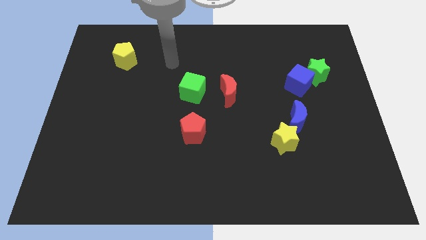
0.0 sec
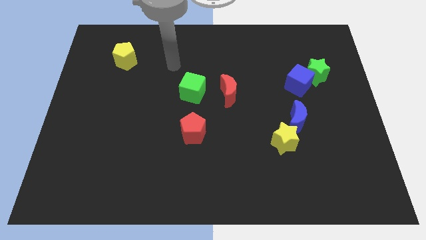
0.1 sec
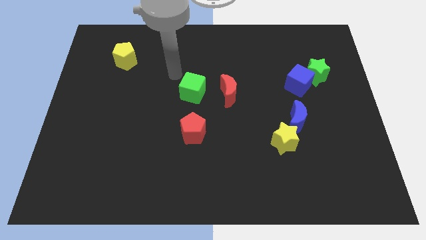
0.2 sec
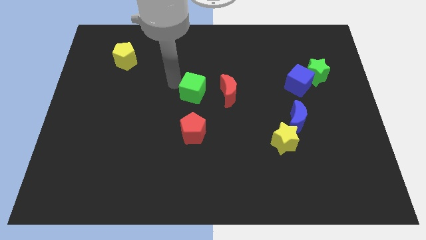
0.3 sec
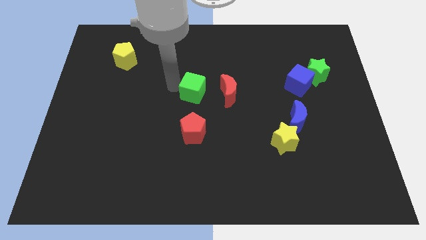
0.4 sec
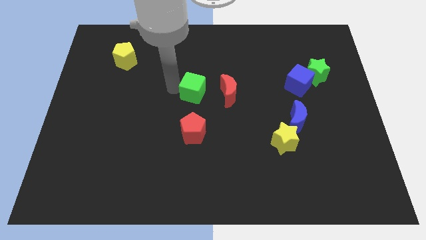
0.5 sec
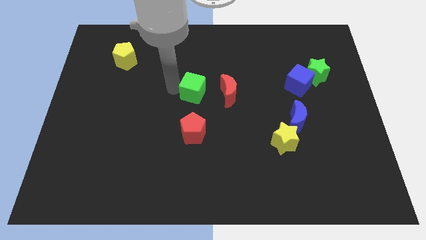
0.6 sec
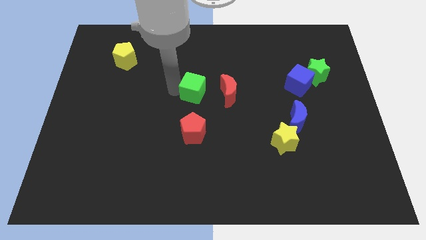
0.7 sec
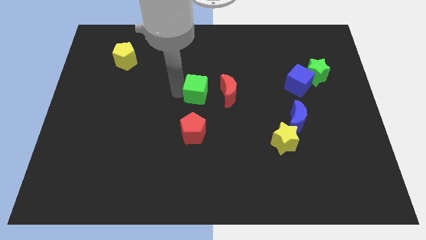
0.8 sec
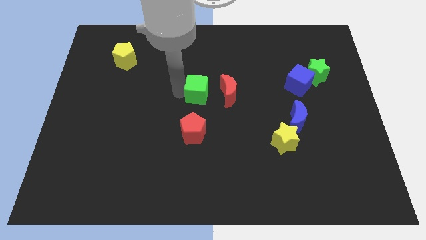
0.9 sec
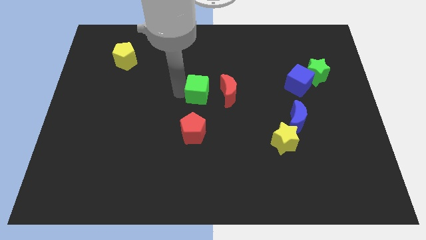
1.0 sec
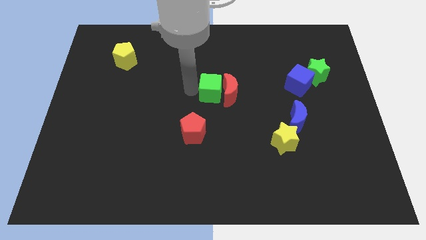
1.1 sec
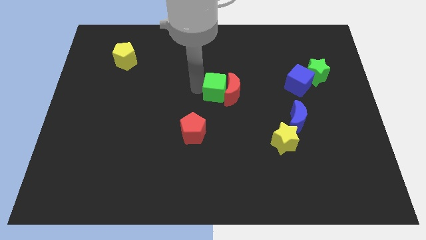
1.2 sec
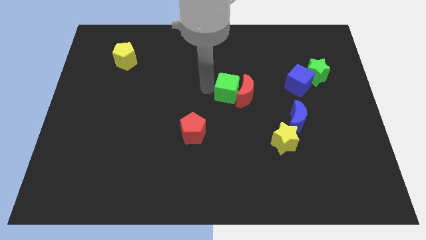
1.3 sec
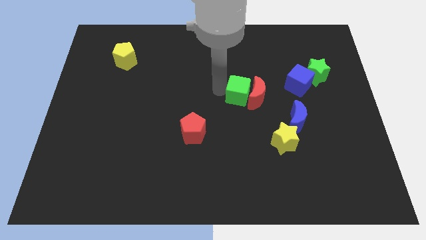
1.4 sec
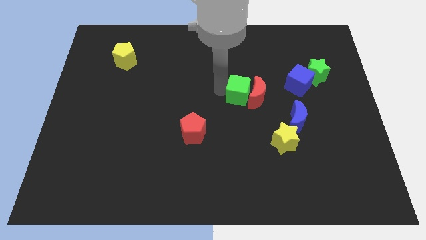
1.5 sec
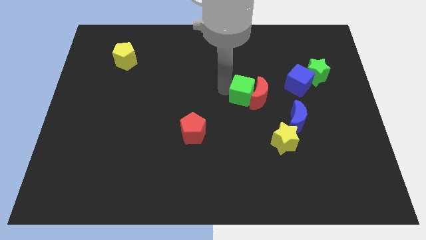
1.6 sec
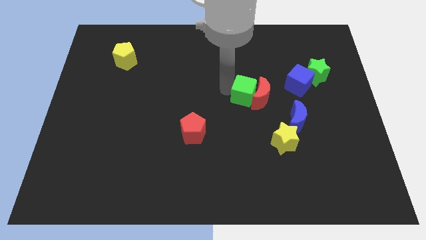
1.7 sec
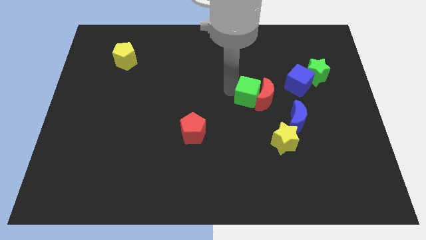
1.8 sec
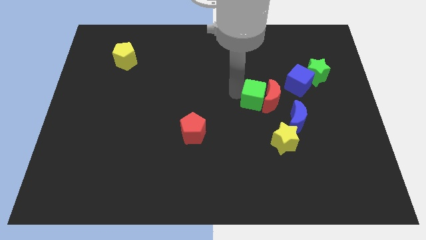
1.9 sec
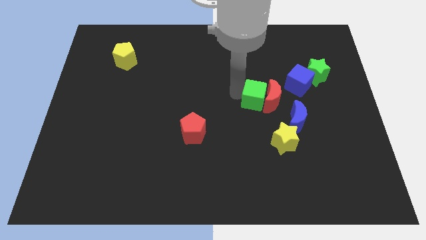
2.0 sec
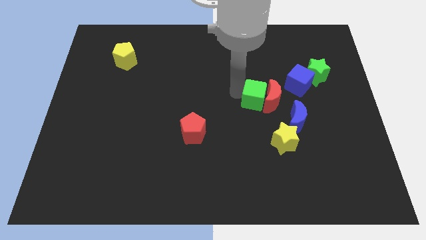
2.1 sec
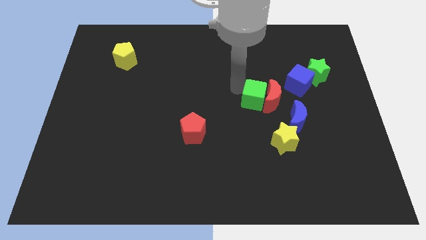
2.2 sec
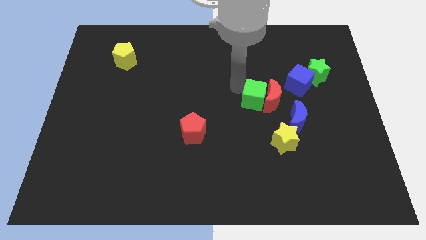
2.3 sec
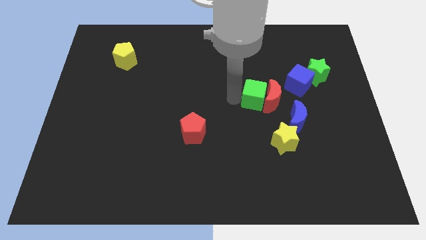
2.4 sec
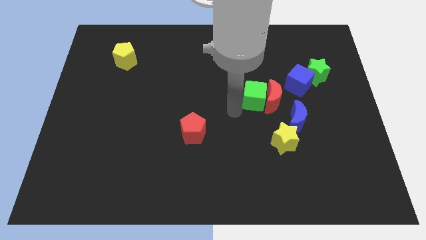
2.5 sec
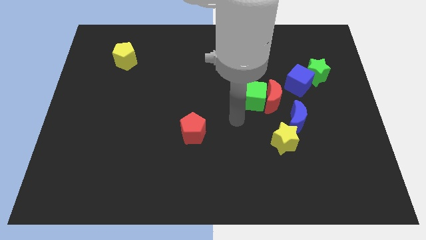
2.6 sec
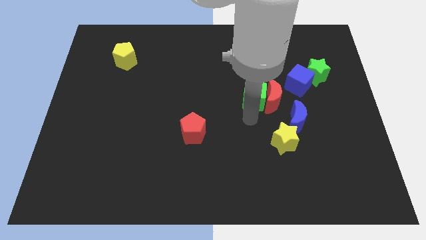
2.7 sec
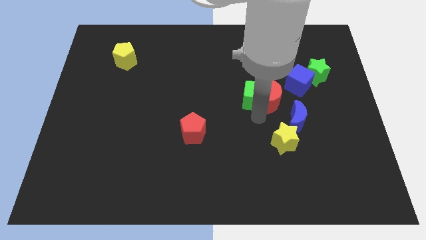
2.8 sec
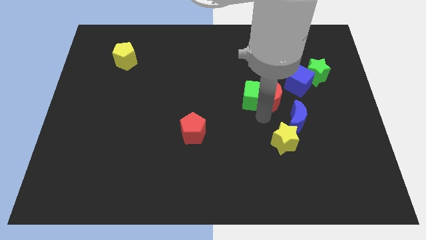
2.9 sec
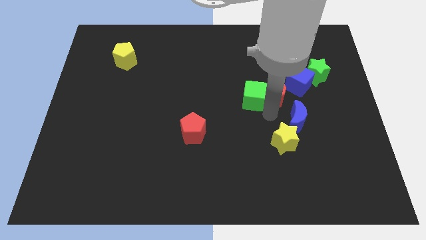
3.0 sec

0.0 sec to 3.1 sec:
push the green cube and red moon towards the blue block

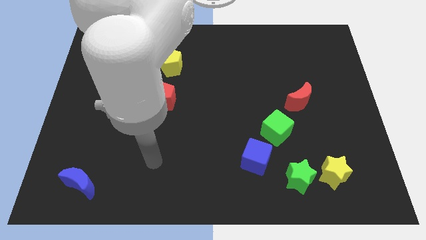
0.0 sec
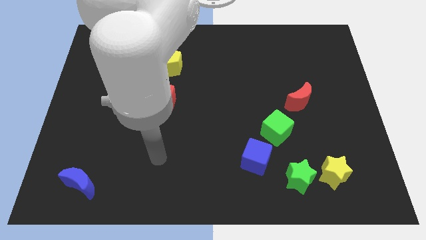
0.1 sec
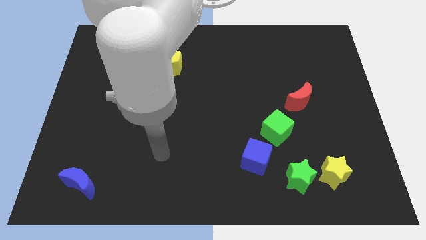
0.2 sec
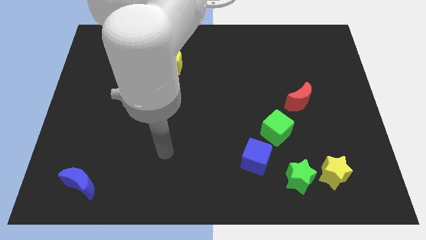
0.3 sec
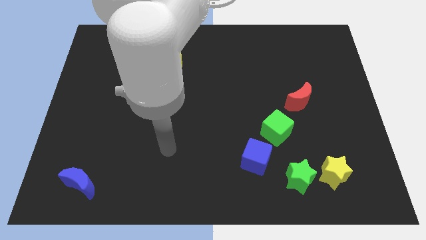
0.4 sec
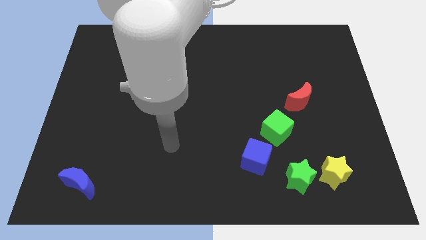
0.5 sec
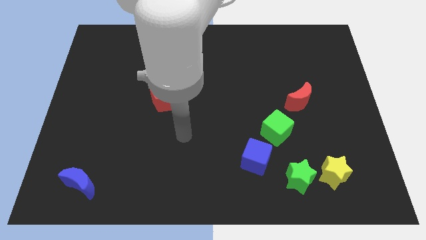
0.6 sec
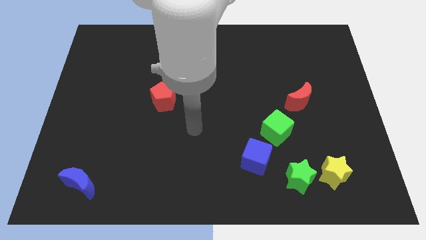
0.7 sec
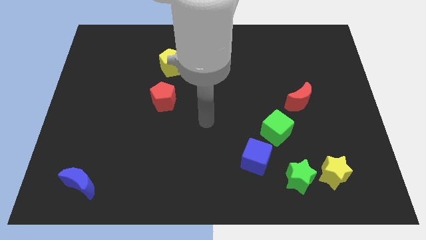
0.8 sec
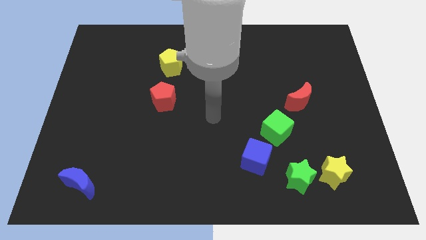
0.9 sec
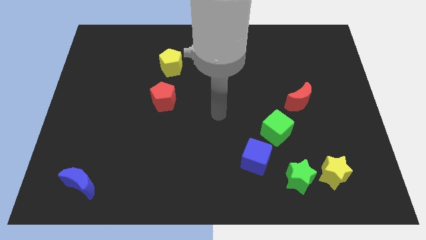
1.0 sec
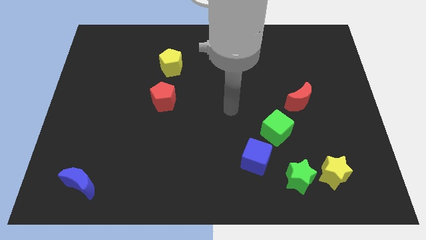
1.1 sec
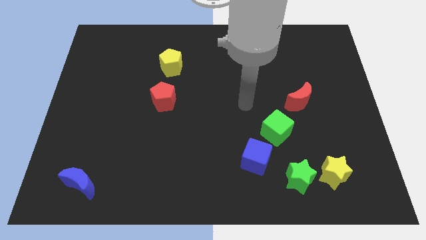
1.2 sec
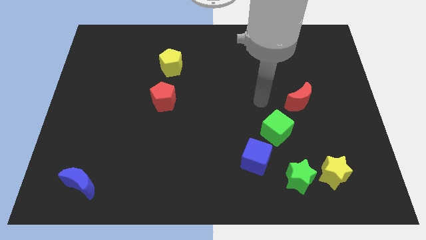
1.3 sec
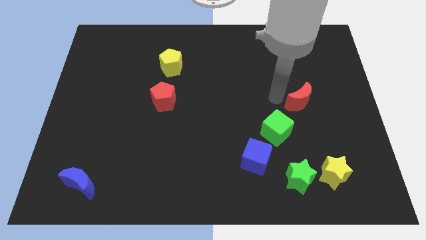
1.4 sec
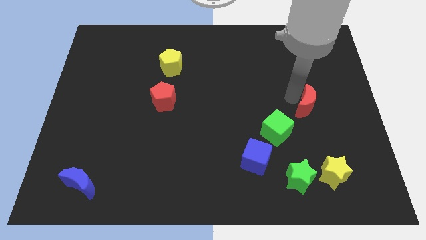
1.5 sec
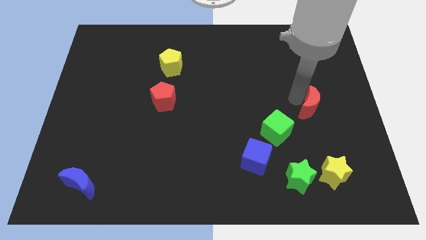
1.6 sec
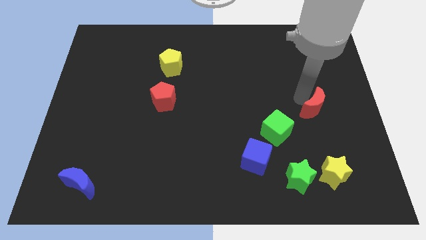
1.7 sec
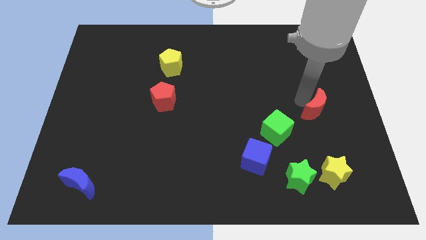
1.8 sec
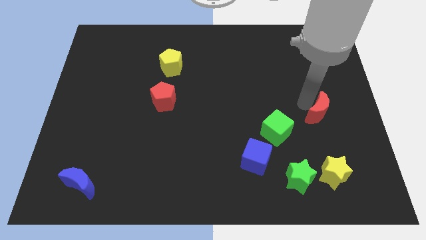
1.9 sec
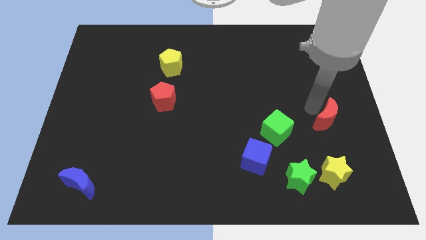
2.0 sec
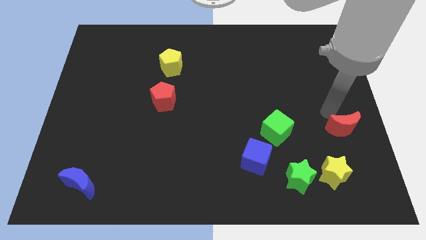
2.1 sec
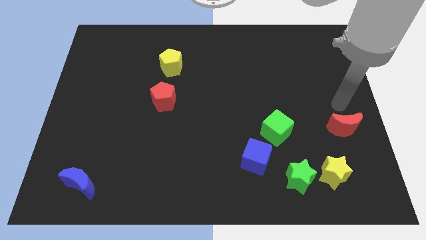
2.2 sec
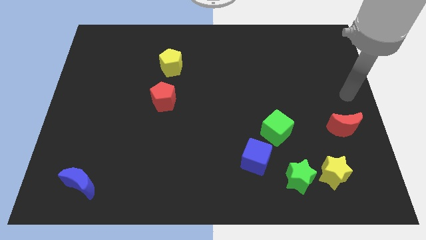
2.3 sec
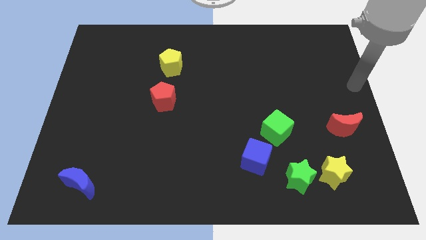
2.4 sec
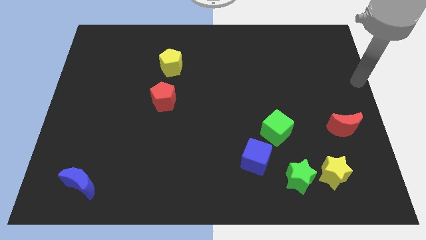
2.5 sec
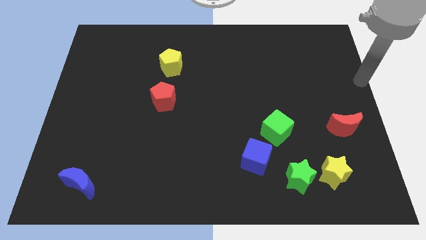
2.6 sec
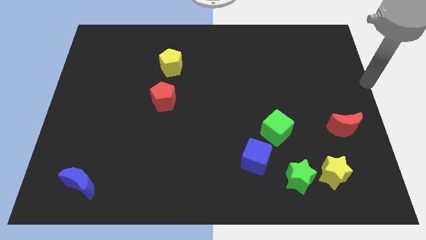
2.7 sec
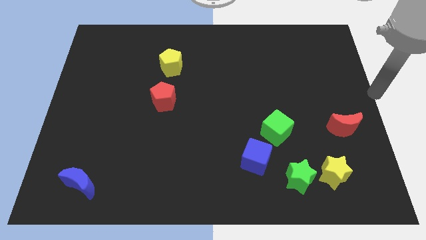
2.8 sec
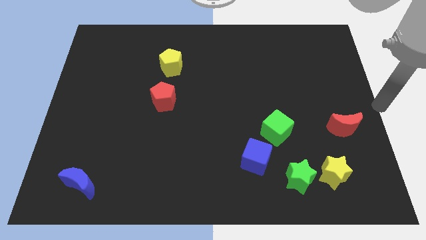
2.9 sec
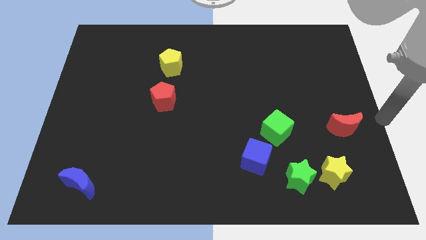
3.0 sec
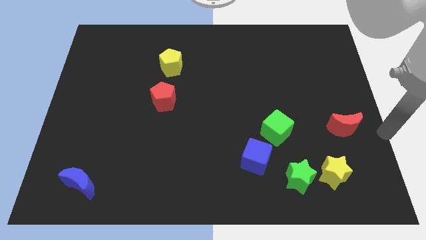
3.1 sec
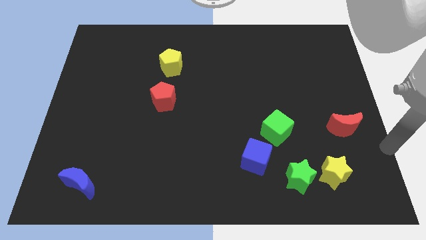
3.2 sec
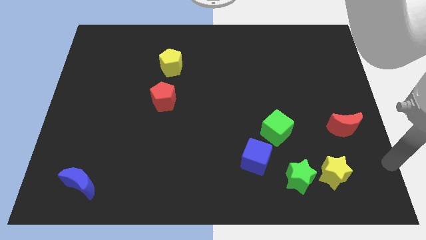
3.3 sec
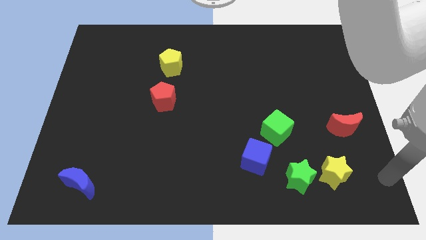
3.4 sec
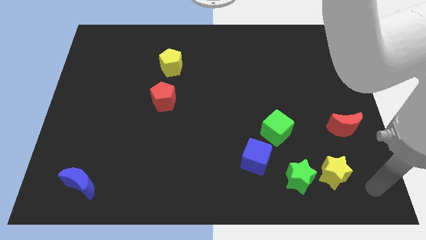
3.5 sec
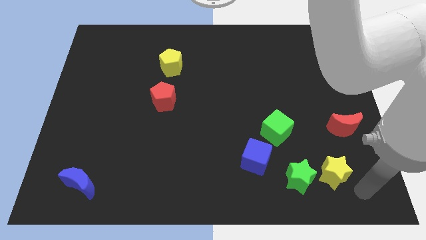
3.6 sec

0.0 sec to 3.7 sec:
place the red moon above the yellow star

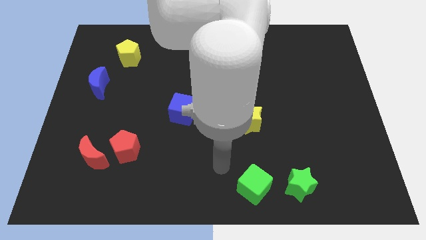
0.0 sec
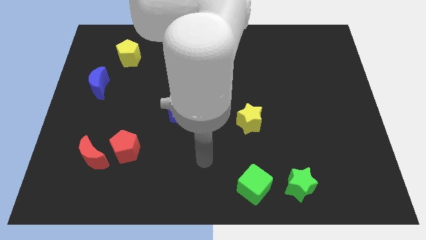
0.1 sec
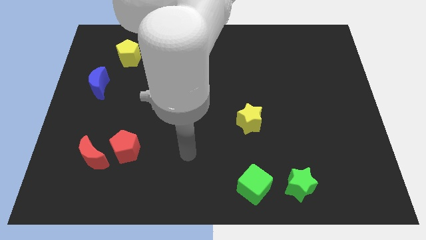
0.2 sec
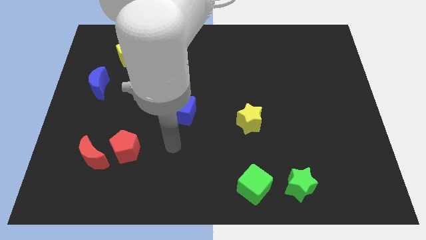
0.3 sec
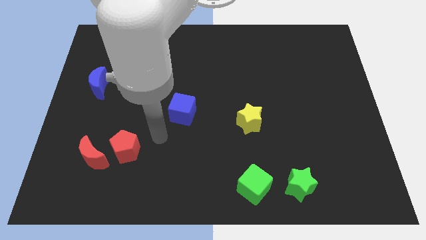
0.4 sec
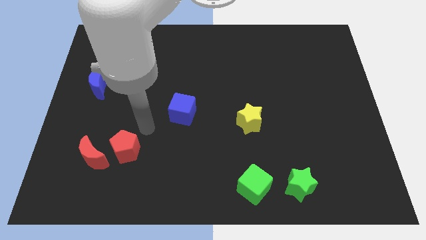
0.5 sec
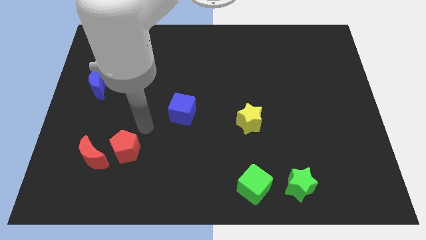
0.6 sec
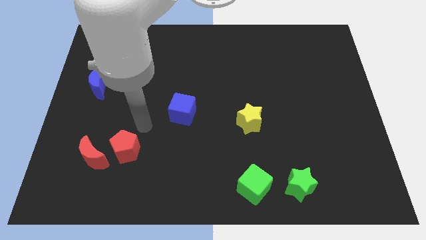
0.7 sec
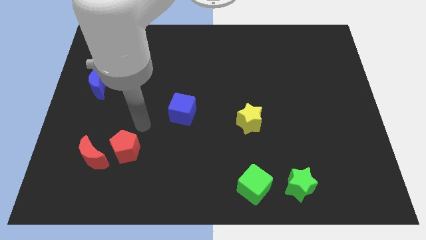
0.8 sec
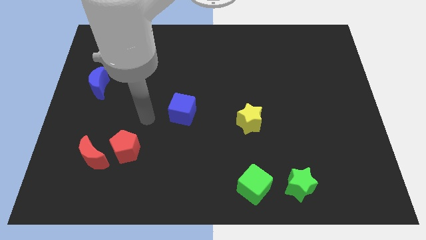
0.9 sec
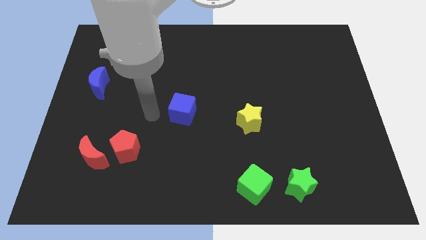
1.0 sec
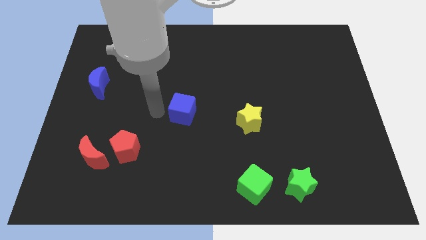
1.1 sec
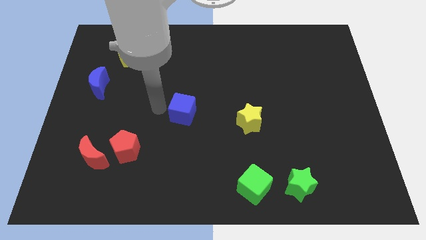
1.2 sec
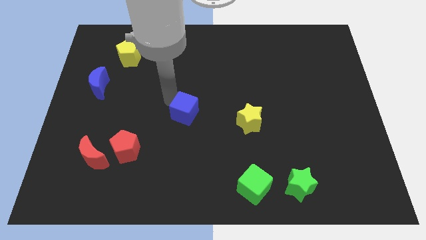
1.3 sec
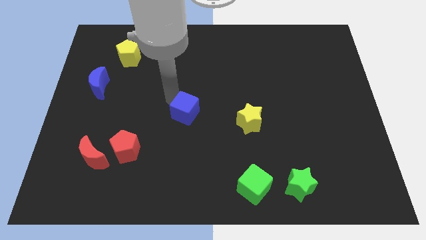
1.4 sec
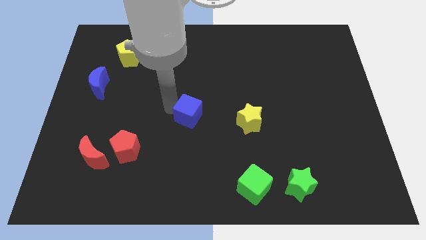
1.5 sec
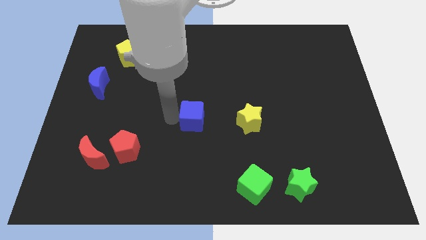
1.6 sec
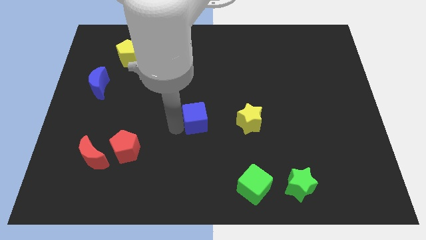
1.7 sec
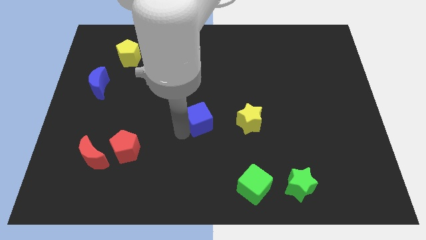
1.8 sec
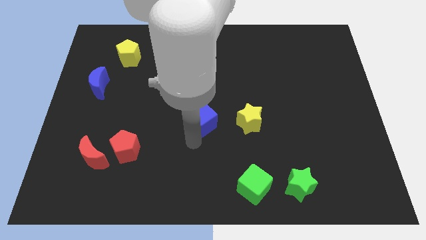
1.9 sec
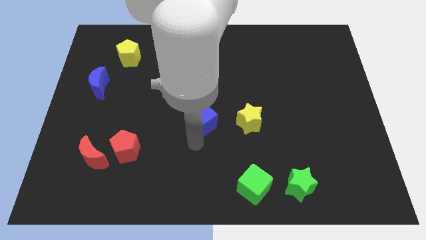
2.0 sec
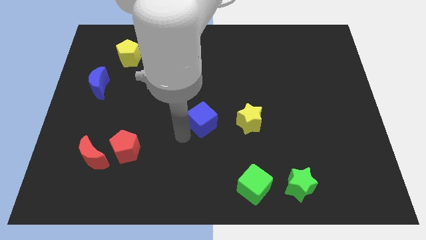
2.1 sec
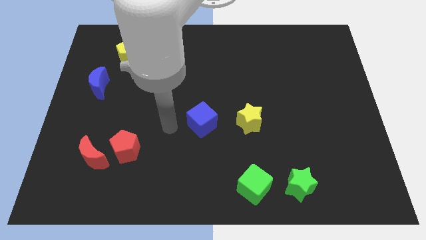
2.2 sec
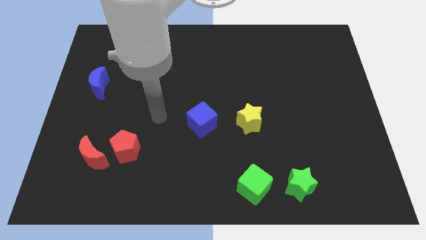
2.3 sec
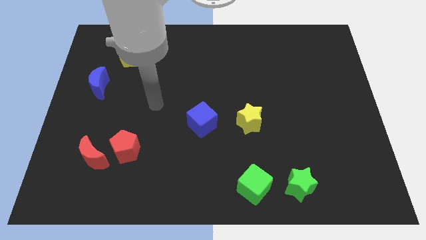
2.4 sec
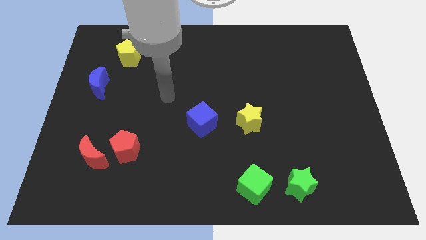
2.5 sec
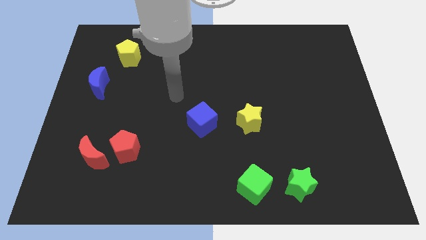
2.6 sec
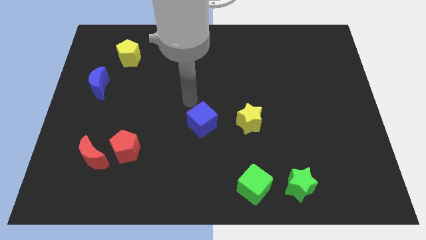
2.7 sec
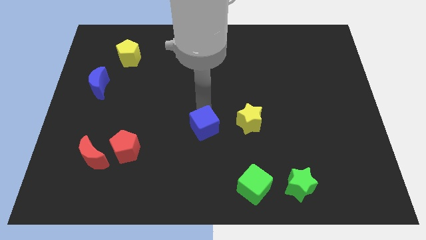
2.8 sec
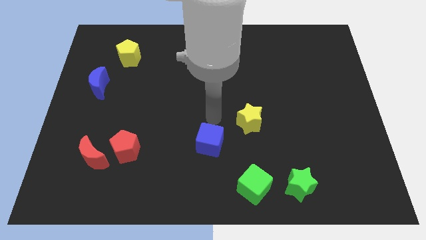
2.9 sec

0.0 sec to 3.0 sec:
place the blue cube to the left of the yellow star
